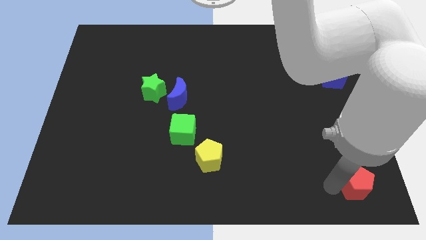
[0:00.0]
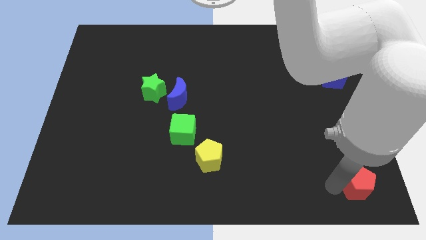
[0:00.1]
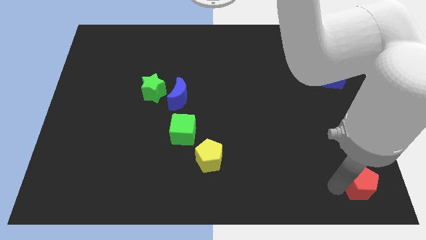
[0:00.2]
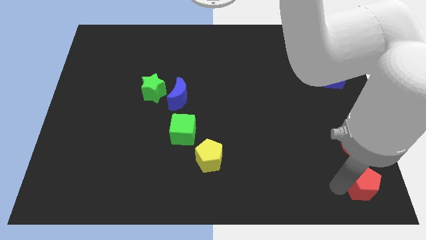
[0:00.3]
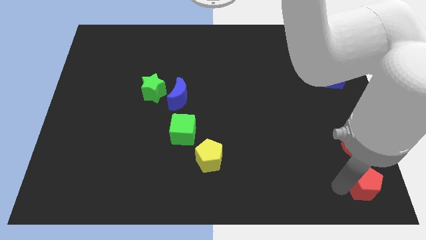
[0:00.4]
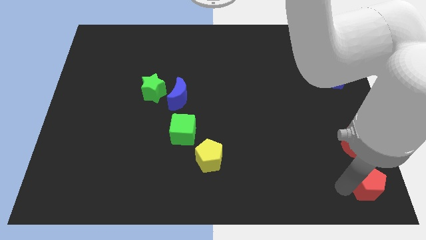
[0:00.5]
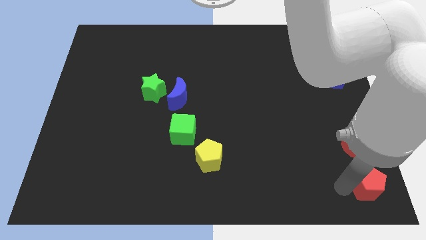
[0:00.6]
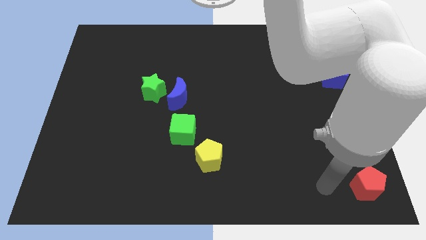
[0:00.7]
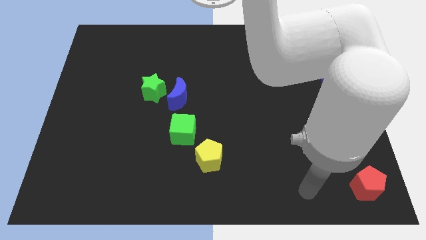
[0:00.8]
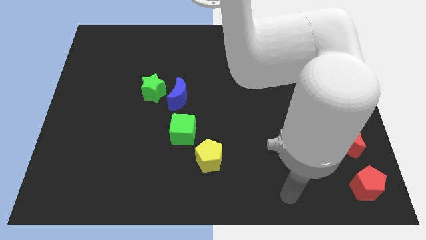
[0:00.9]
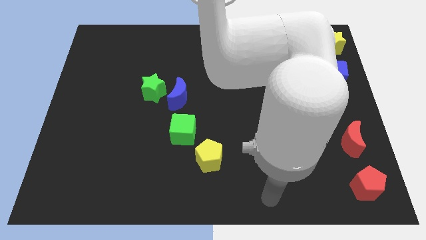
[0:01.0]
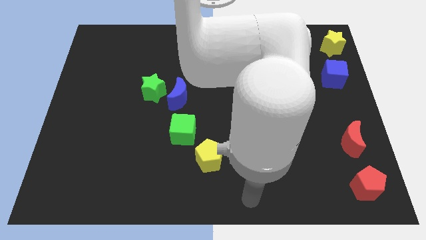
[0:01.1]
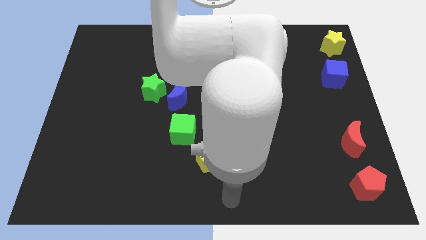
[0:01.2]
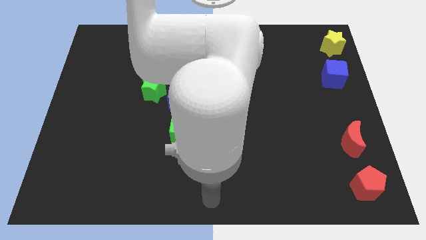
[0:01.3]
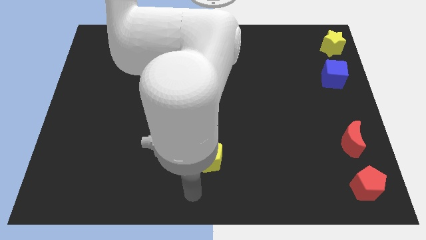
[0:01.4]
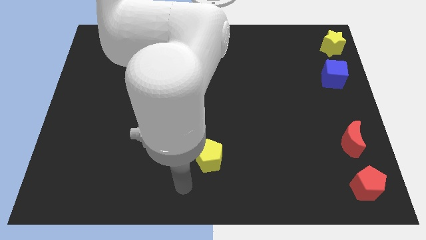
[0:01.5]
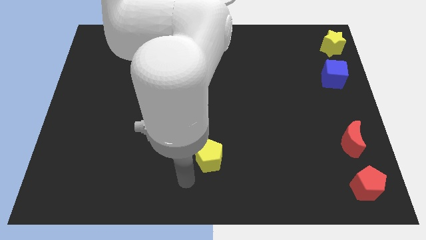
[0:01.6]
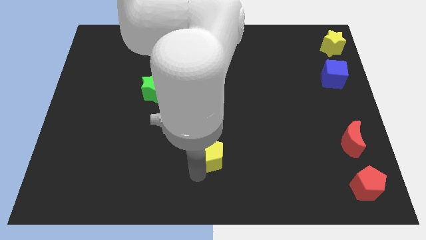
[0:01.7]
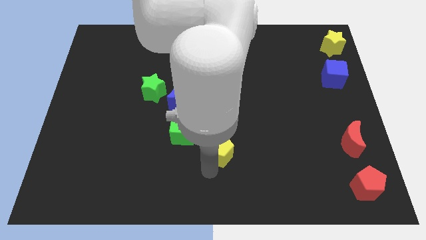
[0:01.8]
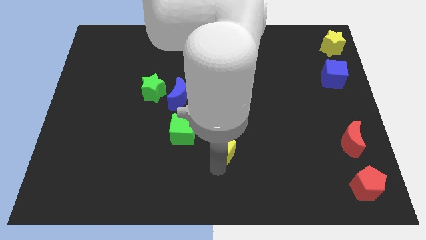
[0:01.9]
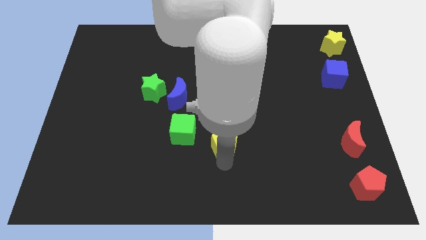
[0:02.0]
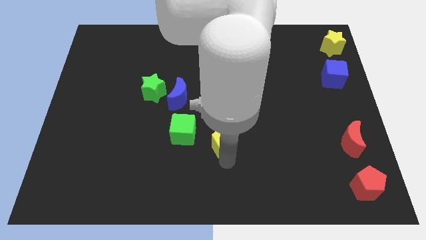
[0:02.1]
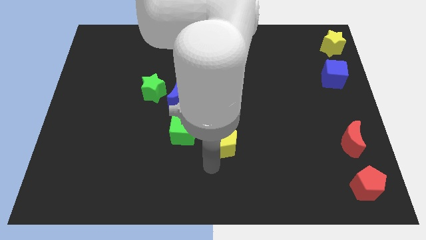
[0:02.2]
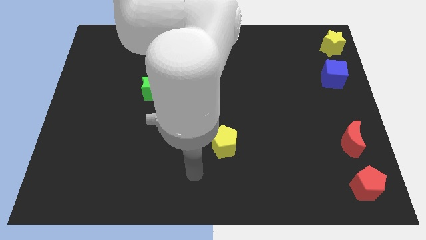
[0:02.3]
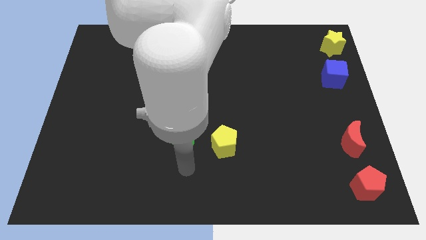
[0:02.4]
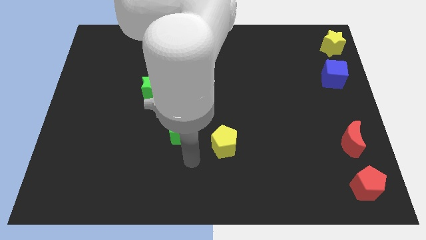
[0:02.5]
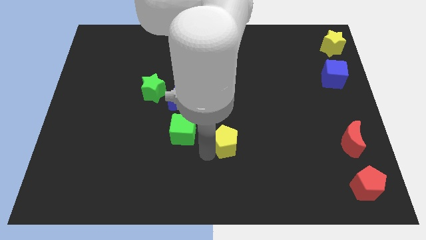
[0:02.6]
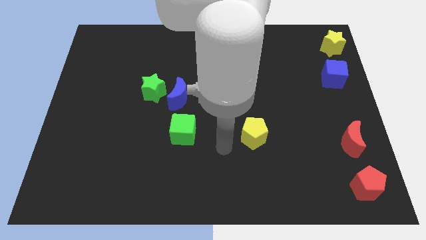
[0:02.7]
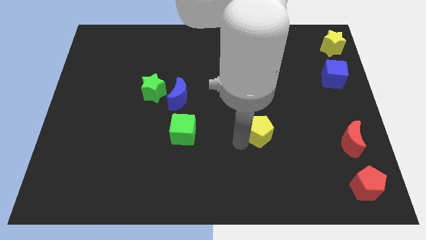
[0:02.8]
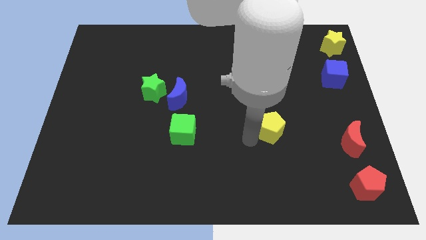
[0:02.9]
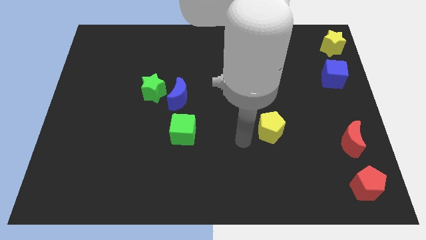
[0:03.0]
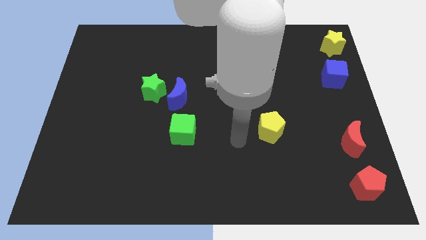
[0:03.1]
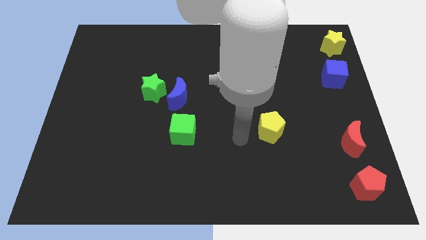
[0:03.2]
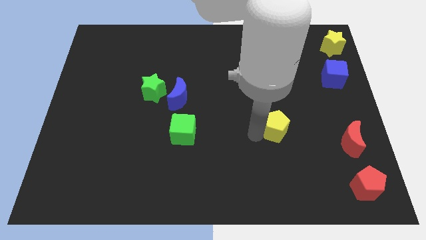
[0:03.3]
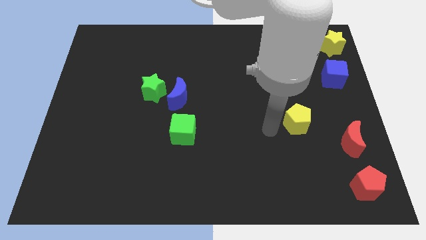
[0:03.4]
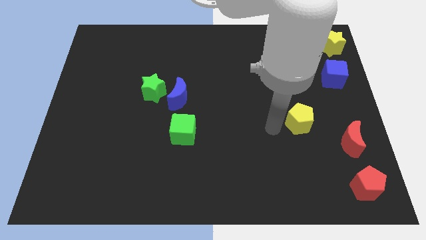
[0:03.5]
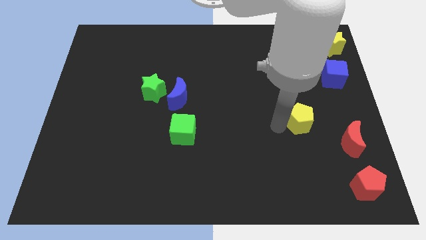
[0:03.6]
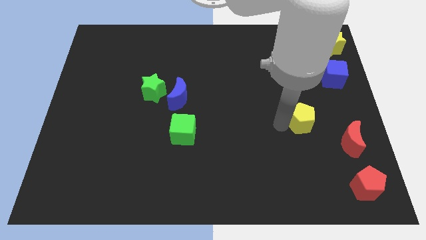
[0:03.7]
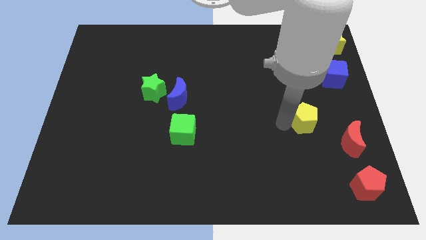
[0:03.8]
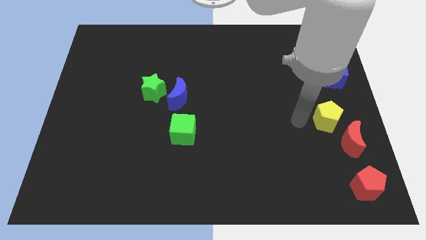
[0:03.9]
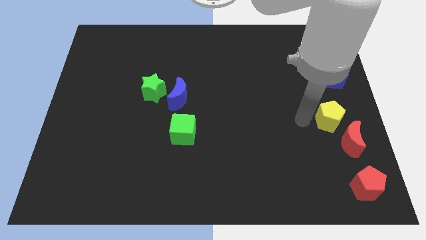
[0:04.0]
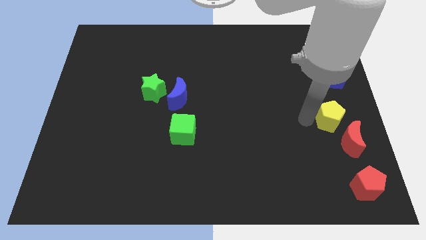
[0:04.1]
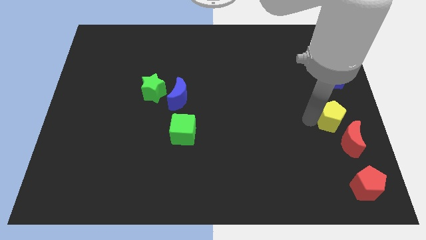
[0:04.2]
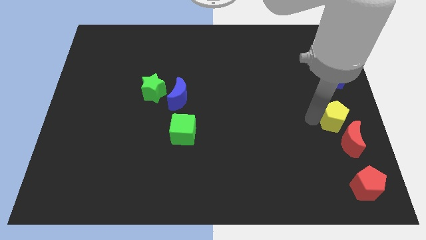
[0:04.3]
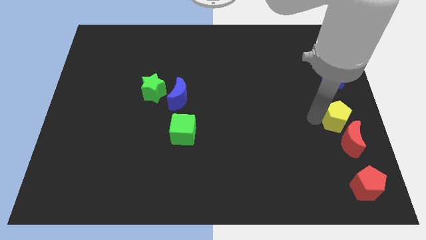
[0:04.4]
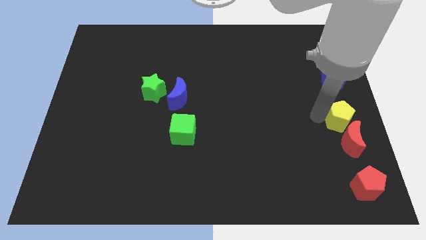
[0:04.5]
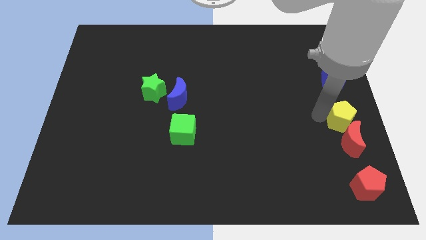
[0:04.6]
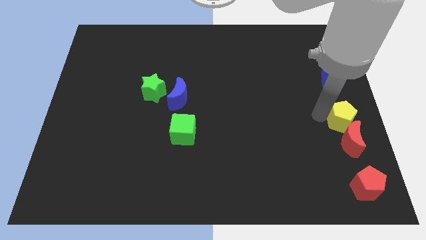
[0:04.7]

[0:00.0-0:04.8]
place yellow pentagon to the top of red moon

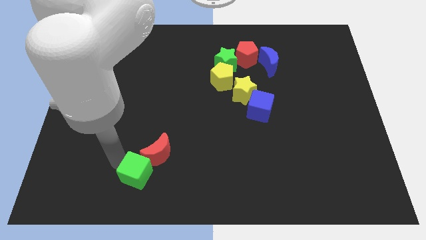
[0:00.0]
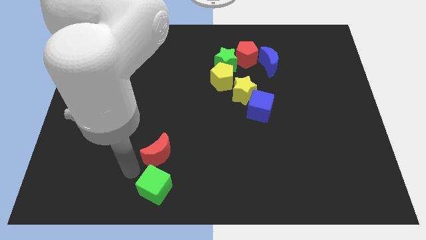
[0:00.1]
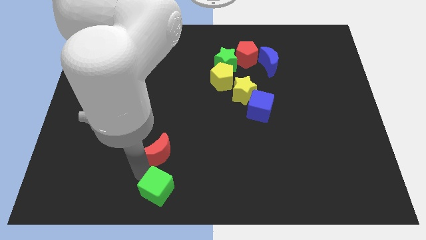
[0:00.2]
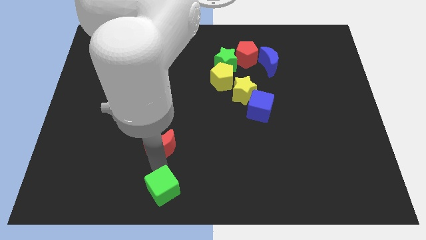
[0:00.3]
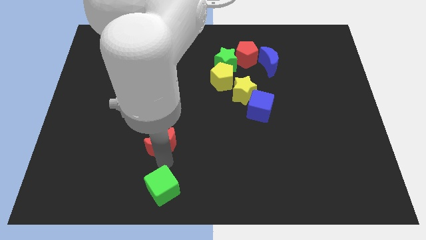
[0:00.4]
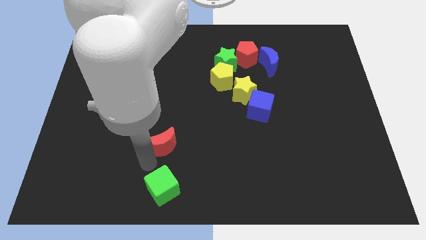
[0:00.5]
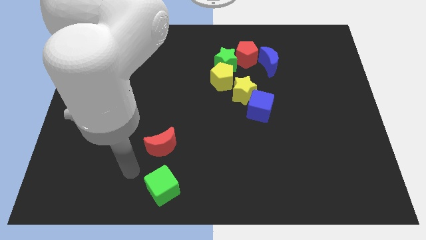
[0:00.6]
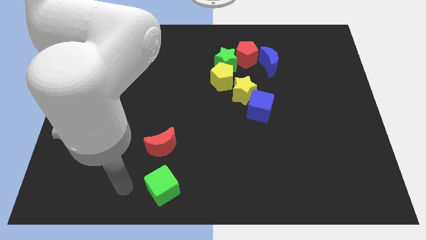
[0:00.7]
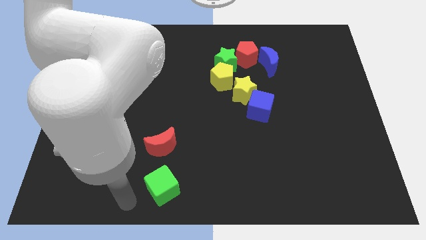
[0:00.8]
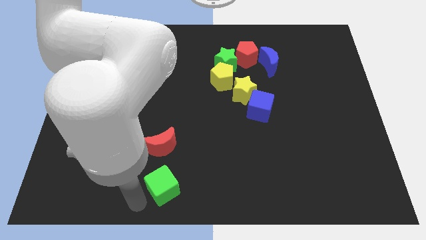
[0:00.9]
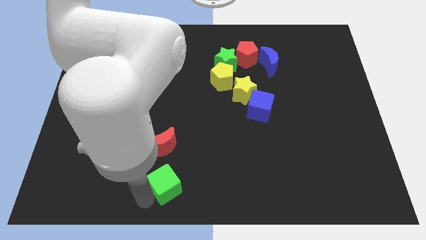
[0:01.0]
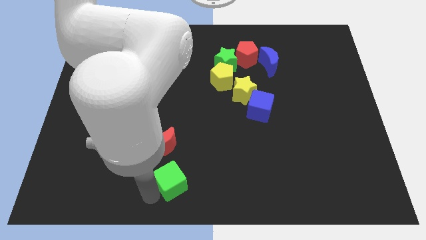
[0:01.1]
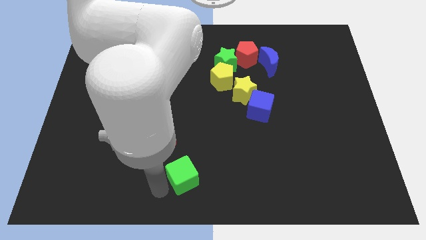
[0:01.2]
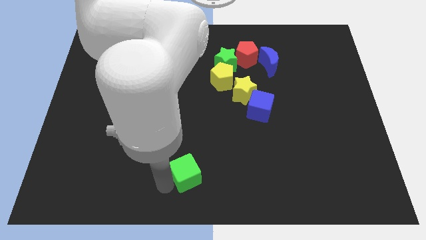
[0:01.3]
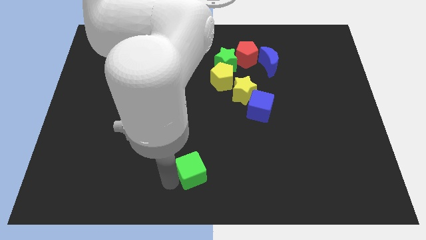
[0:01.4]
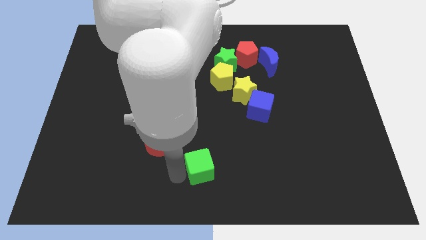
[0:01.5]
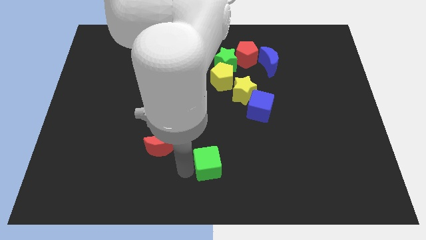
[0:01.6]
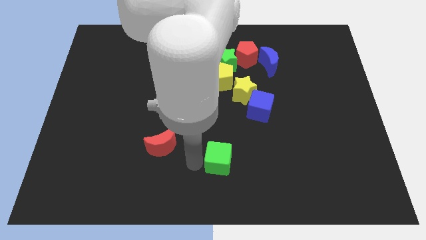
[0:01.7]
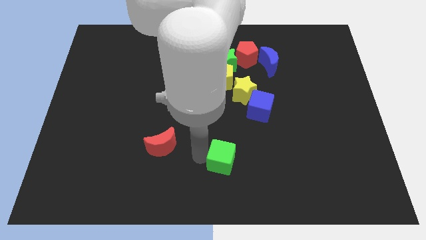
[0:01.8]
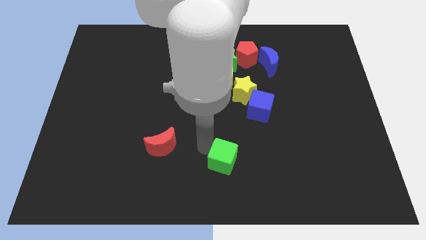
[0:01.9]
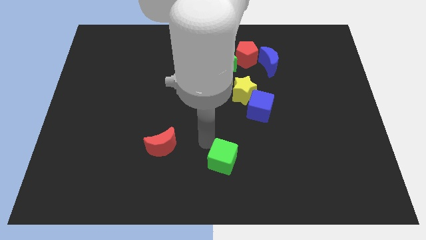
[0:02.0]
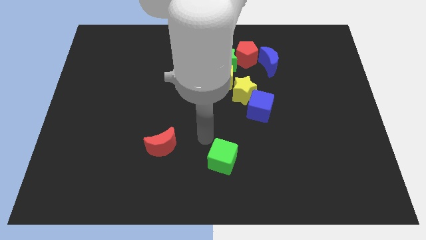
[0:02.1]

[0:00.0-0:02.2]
move the green cube away from the red crescent

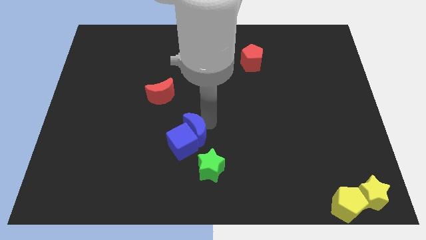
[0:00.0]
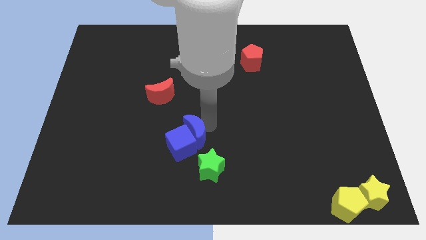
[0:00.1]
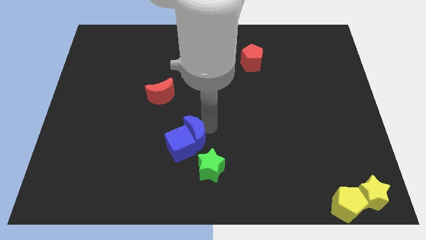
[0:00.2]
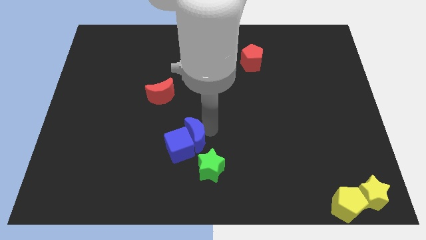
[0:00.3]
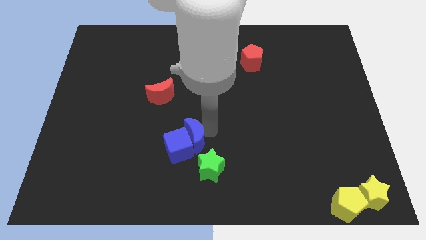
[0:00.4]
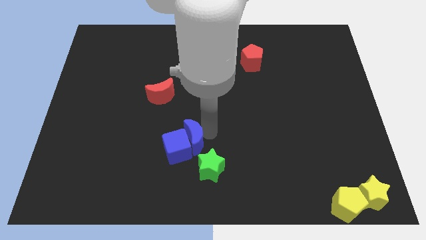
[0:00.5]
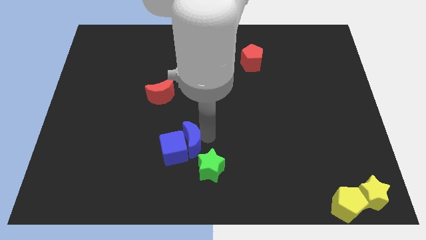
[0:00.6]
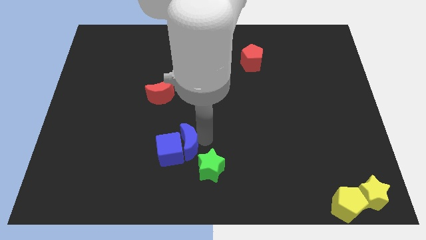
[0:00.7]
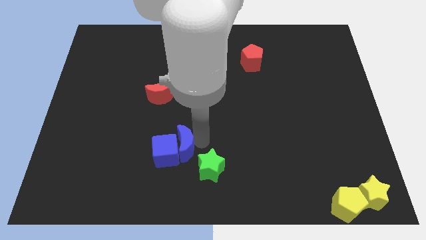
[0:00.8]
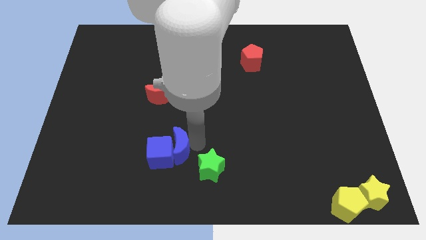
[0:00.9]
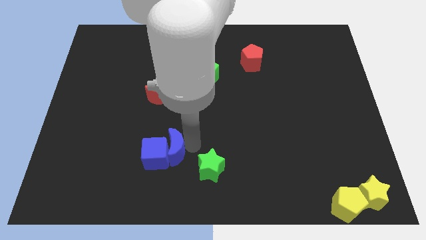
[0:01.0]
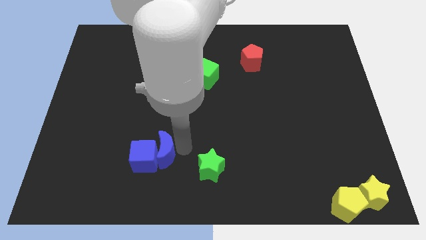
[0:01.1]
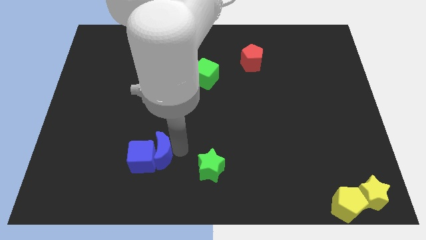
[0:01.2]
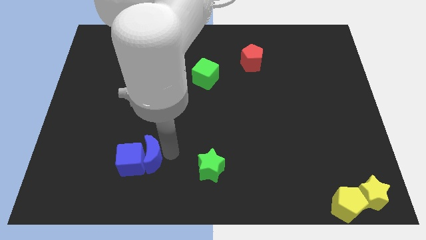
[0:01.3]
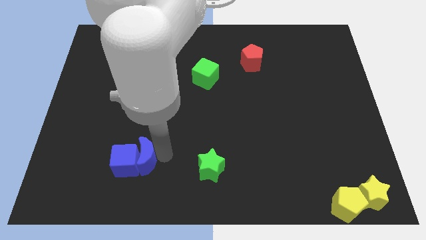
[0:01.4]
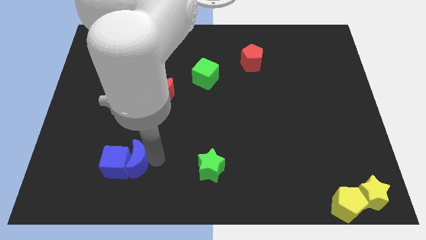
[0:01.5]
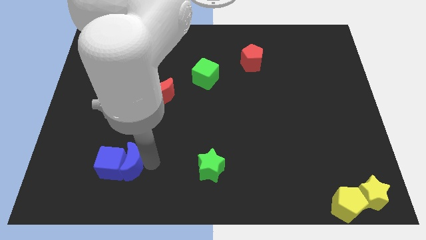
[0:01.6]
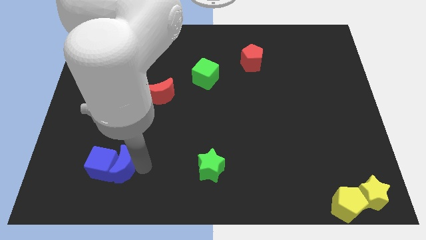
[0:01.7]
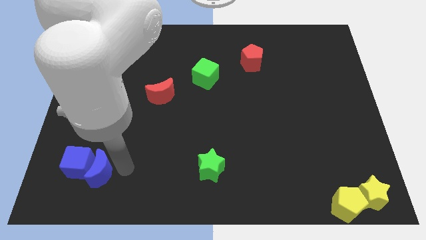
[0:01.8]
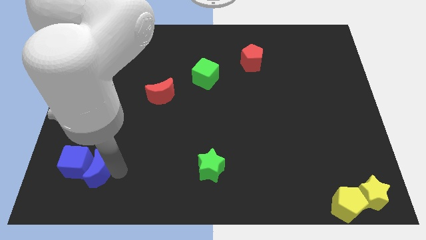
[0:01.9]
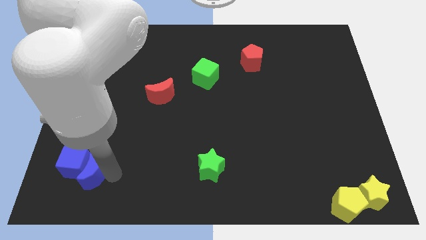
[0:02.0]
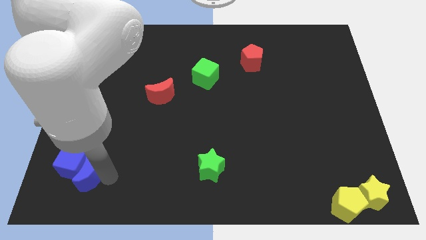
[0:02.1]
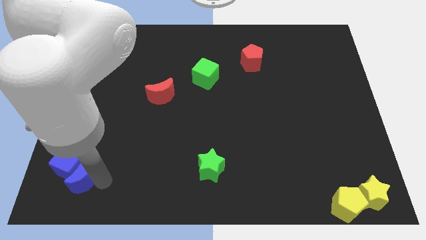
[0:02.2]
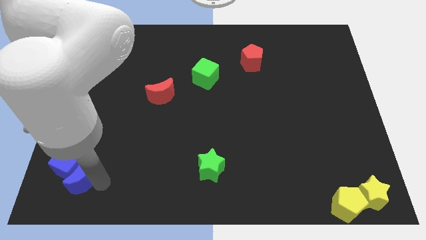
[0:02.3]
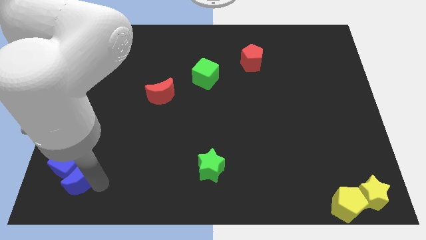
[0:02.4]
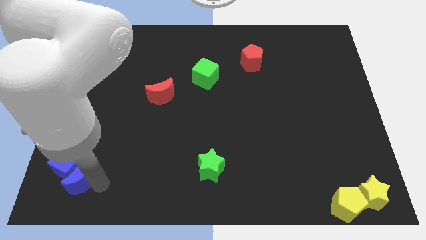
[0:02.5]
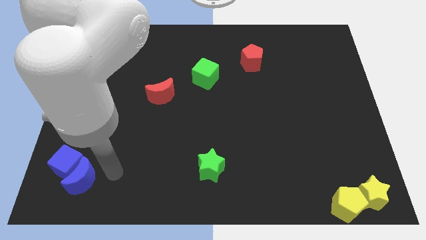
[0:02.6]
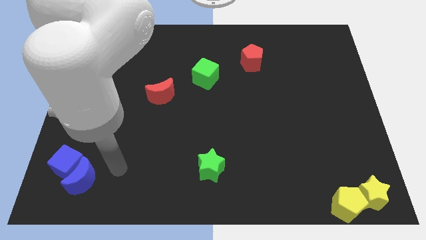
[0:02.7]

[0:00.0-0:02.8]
move the blue cube along with blue crescent towards bottom left of the board
